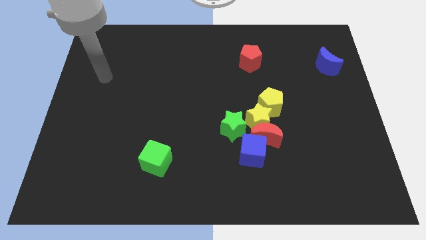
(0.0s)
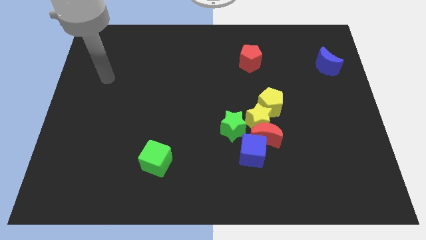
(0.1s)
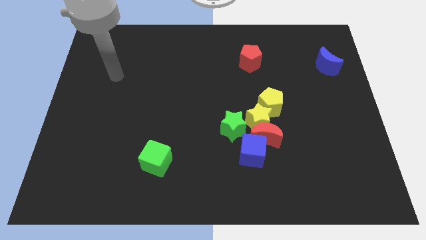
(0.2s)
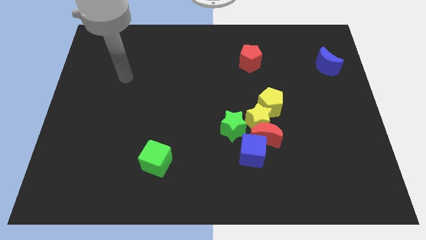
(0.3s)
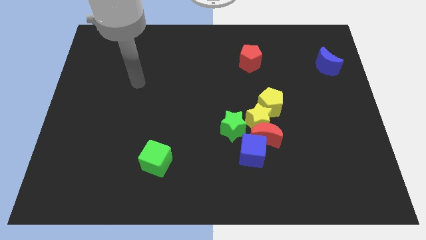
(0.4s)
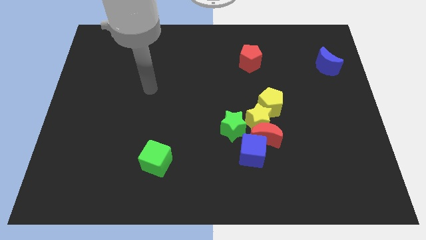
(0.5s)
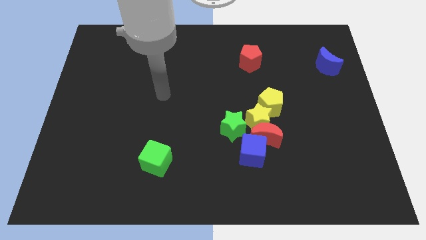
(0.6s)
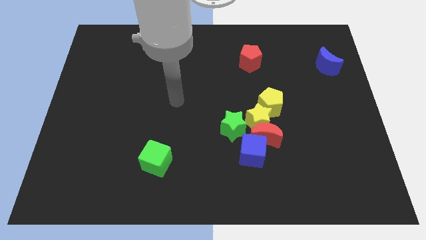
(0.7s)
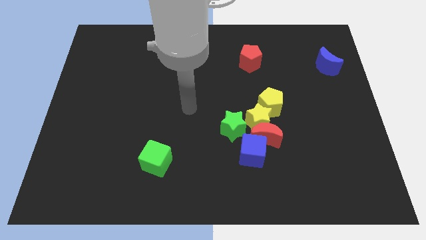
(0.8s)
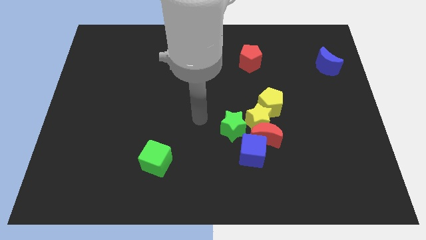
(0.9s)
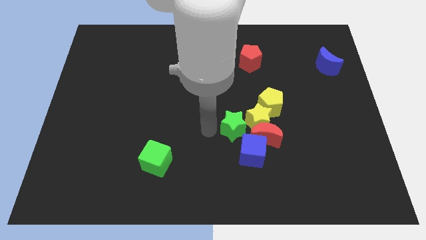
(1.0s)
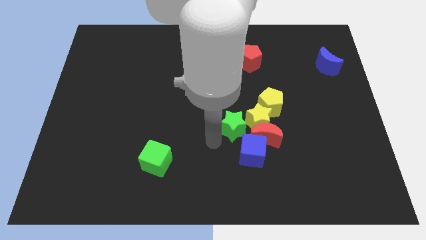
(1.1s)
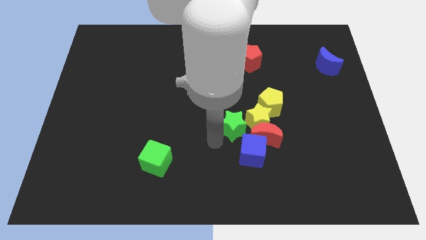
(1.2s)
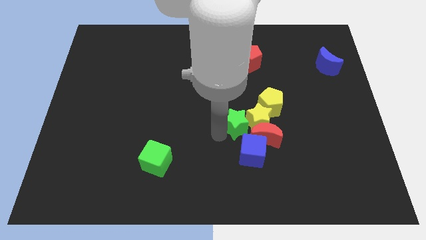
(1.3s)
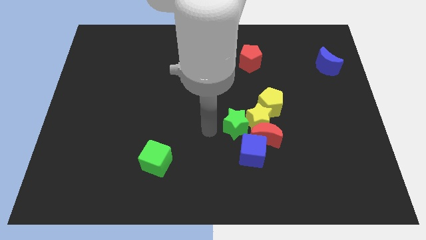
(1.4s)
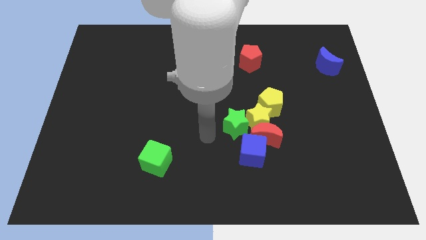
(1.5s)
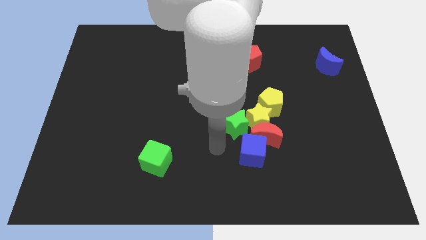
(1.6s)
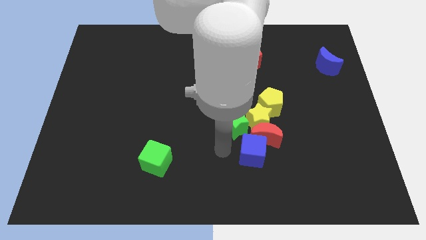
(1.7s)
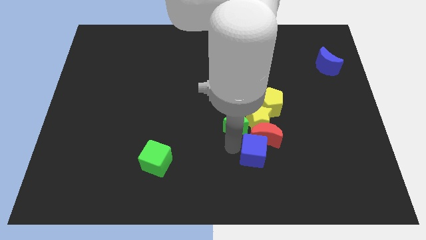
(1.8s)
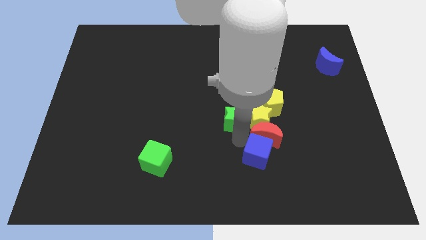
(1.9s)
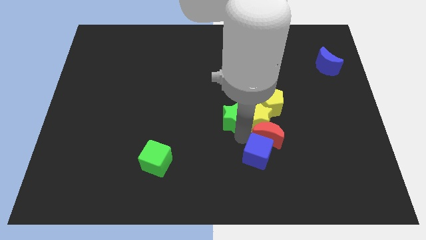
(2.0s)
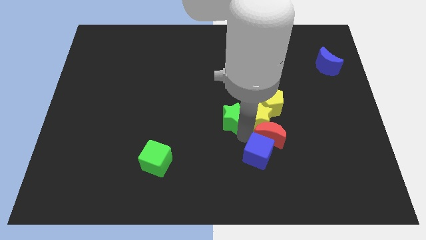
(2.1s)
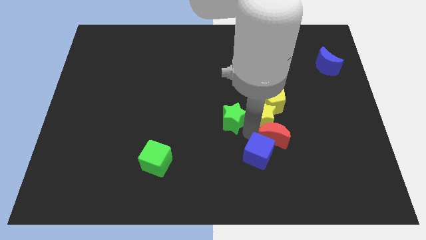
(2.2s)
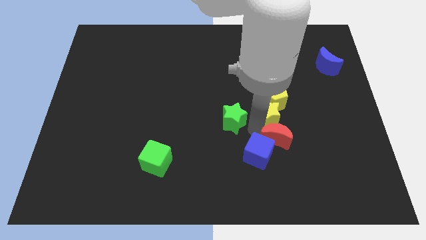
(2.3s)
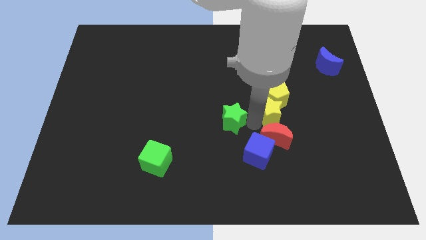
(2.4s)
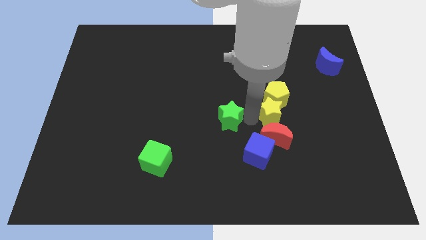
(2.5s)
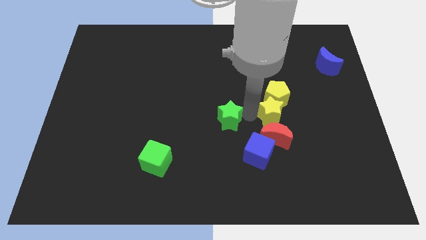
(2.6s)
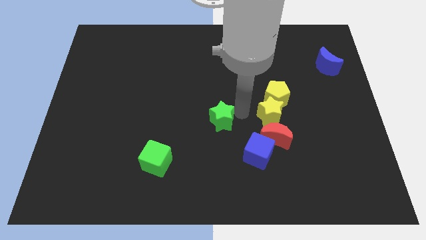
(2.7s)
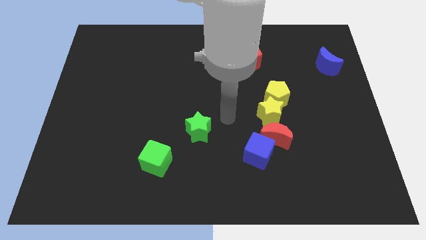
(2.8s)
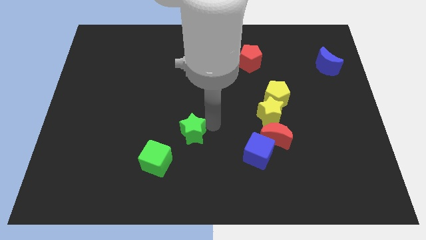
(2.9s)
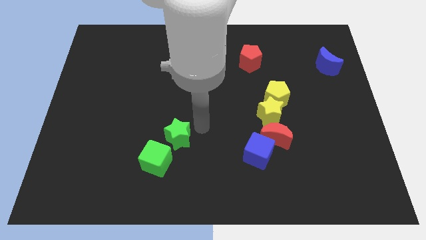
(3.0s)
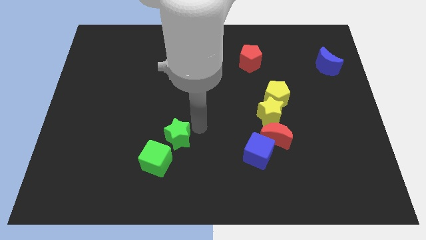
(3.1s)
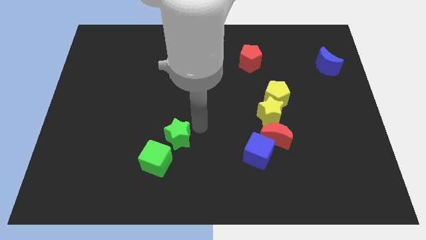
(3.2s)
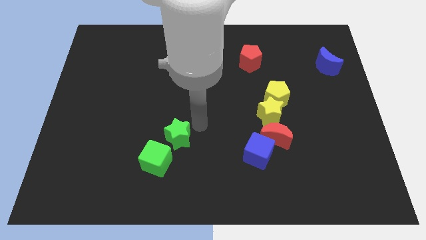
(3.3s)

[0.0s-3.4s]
push green star towards green cube

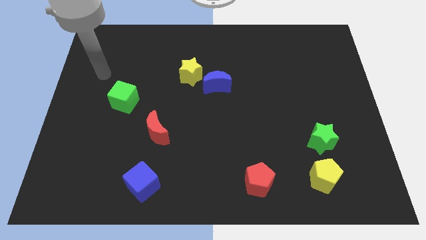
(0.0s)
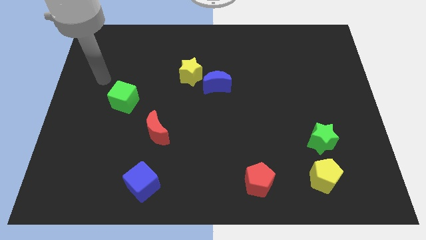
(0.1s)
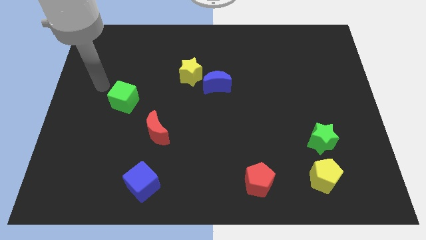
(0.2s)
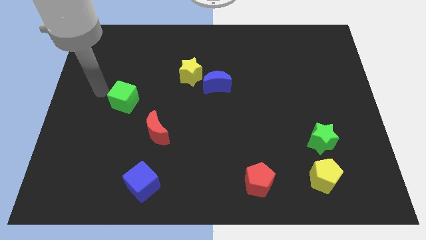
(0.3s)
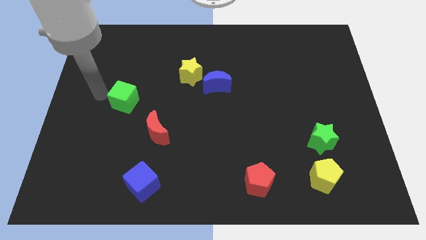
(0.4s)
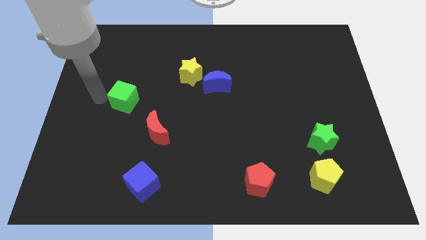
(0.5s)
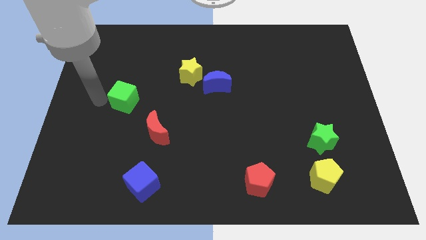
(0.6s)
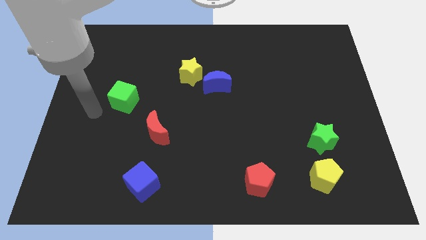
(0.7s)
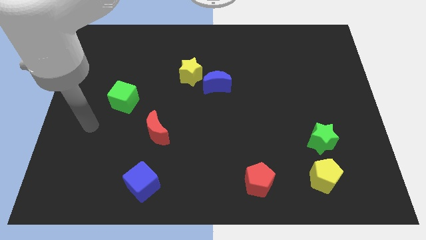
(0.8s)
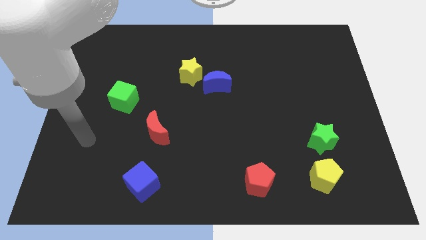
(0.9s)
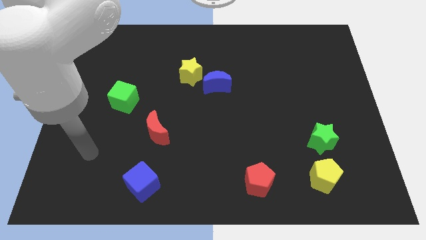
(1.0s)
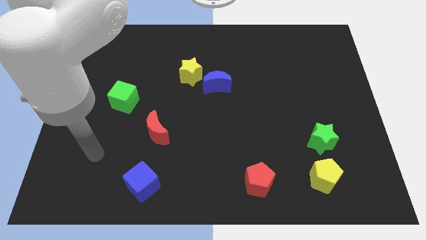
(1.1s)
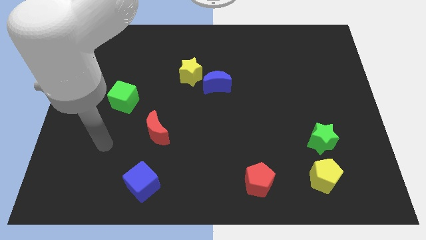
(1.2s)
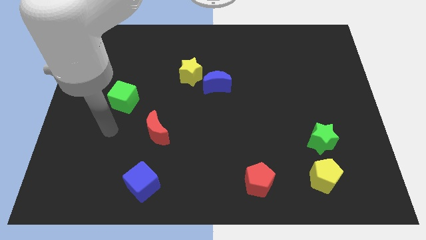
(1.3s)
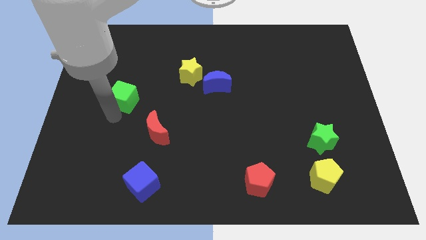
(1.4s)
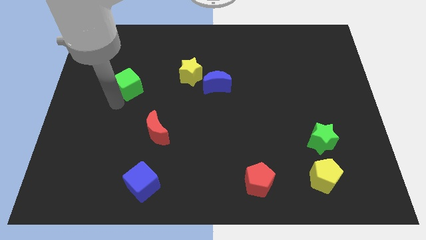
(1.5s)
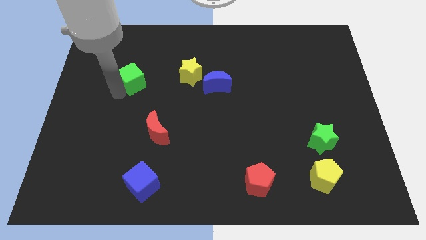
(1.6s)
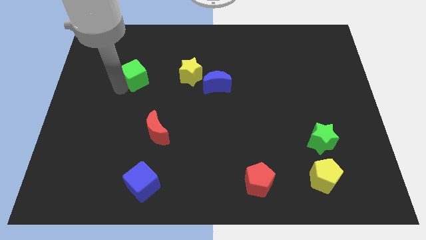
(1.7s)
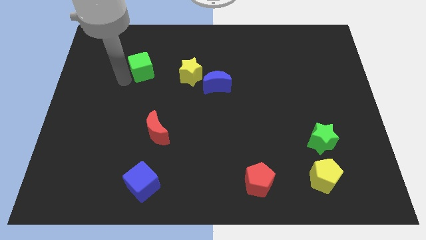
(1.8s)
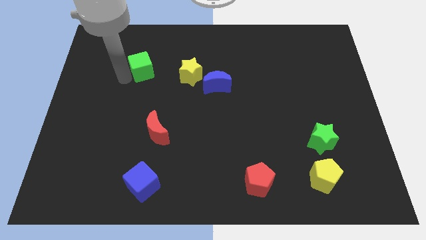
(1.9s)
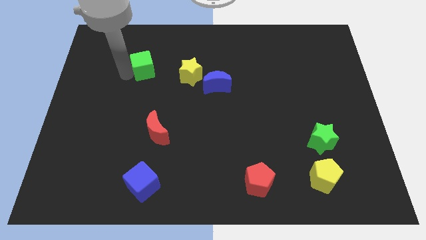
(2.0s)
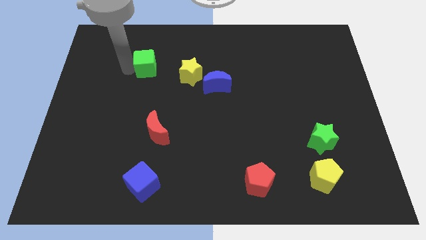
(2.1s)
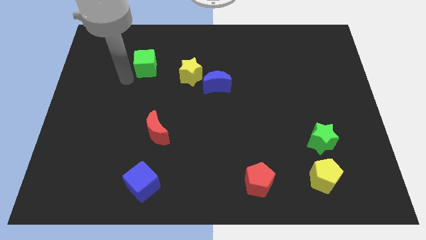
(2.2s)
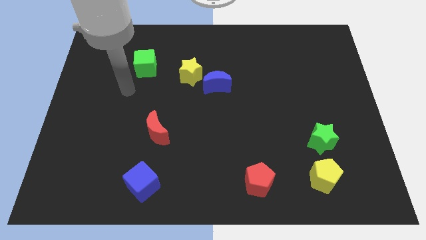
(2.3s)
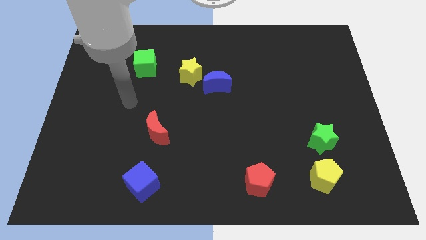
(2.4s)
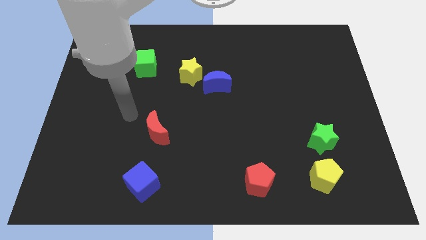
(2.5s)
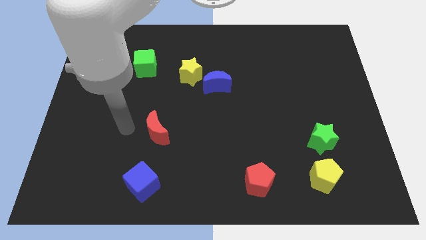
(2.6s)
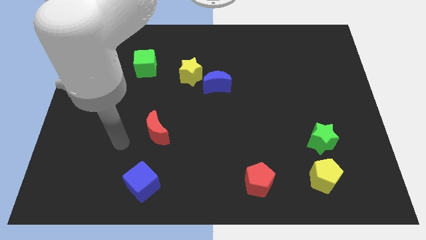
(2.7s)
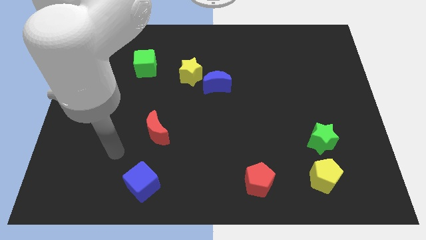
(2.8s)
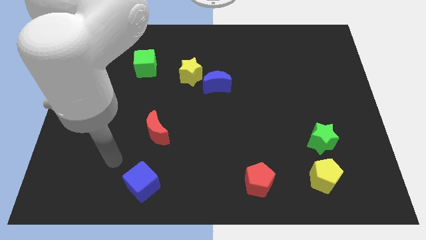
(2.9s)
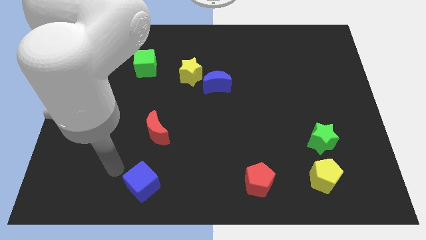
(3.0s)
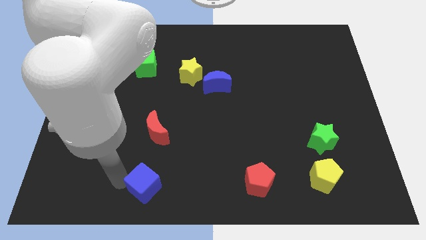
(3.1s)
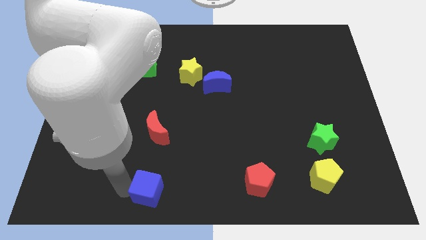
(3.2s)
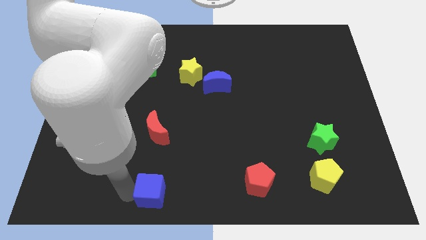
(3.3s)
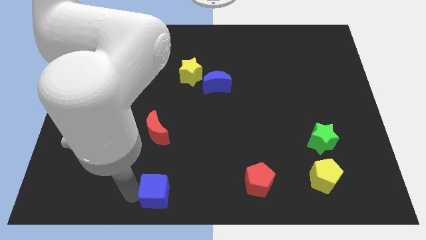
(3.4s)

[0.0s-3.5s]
move the green cube towards the left of the yellow star

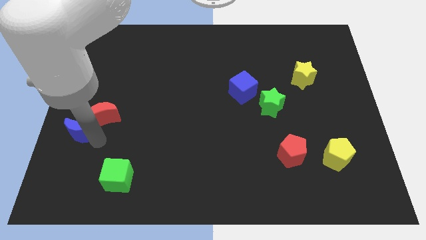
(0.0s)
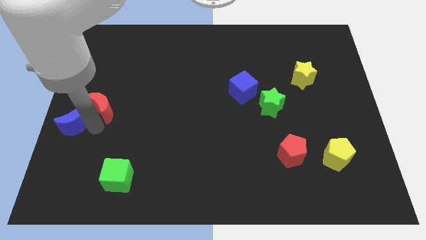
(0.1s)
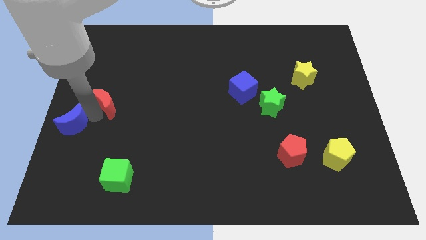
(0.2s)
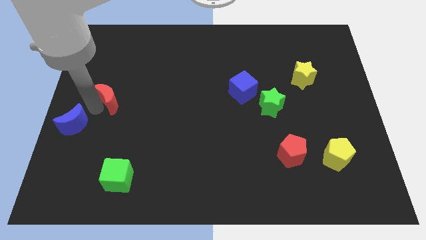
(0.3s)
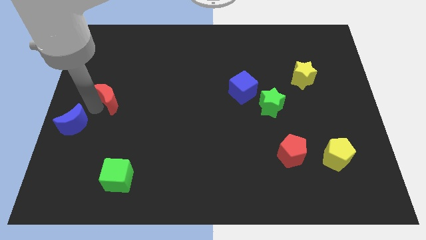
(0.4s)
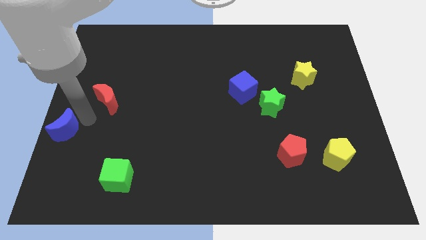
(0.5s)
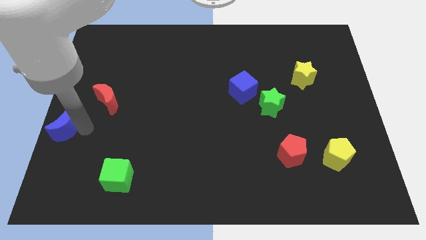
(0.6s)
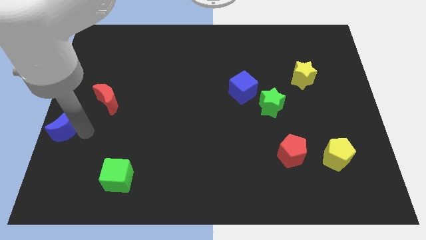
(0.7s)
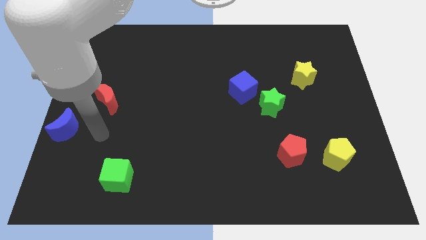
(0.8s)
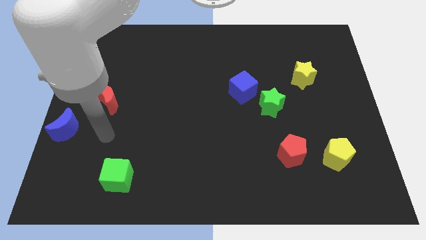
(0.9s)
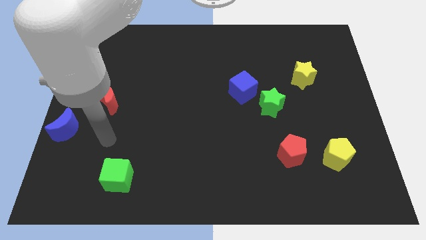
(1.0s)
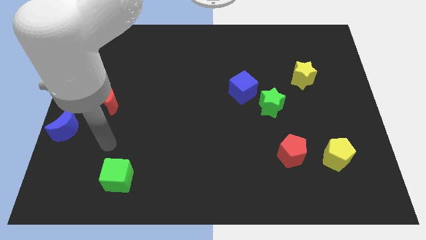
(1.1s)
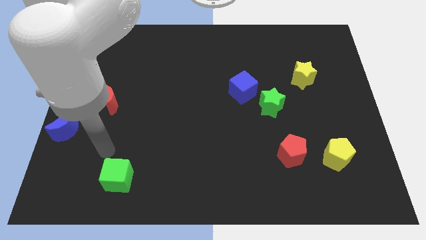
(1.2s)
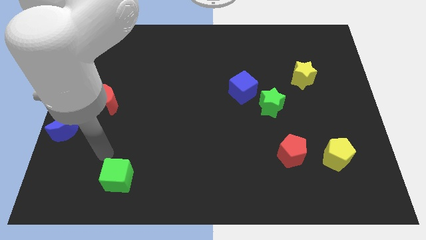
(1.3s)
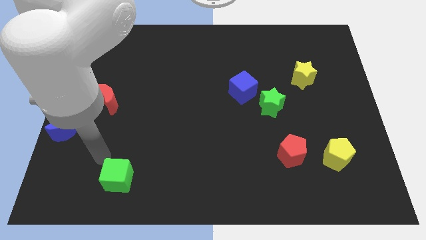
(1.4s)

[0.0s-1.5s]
separate red and the blue crescent

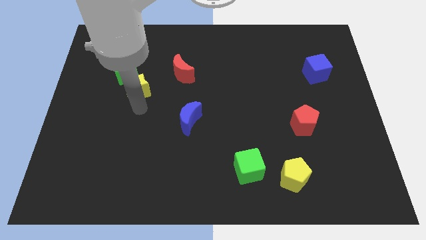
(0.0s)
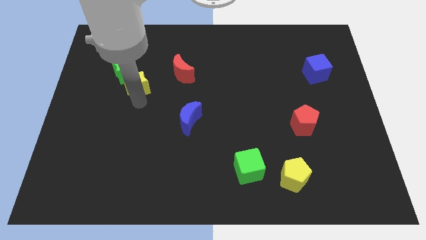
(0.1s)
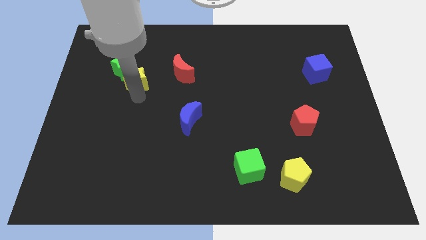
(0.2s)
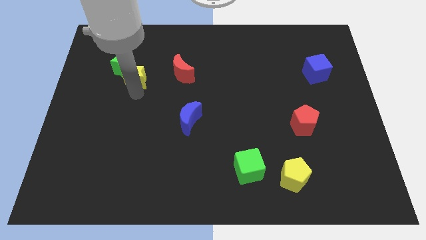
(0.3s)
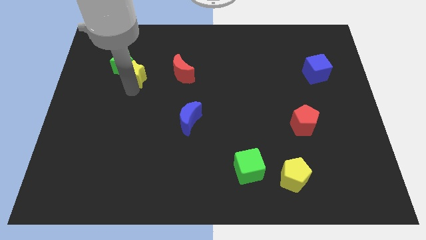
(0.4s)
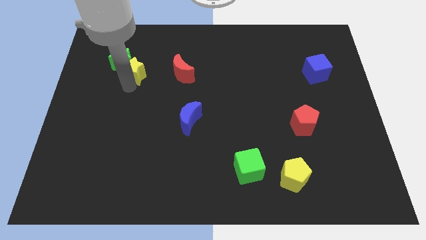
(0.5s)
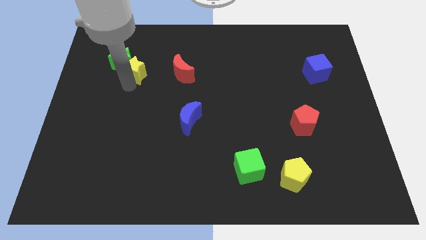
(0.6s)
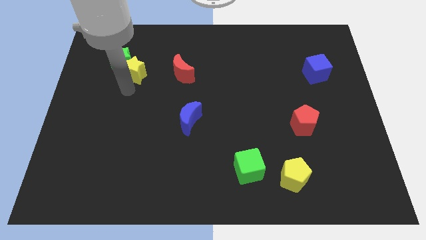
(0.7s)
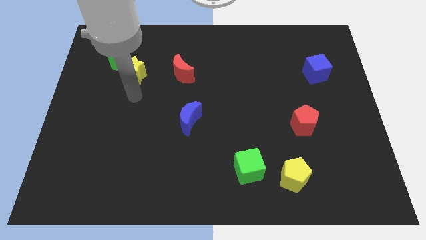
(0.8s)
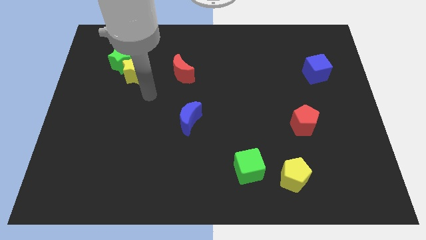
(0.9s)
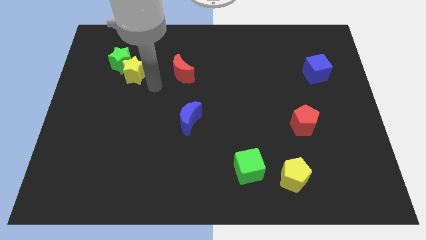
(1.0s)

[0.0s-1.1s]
push the yellow star into the green star
